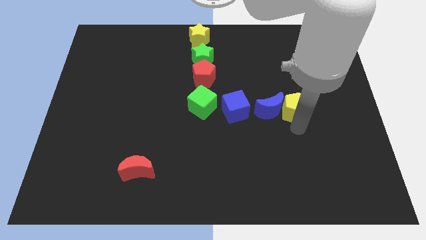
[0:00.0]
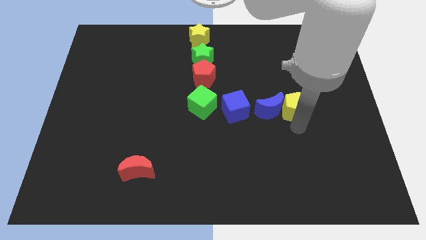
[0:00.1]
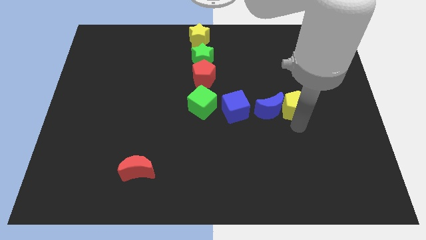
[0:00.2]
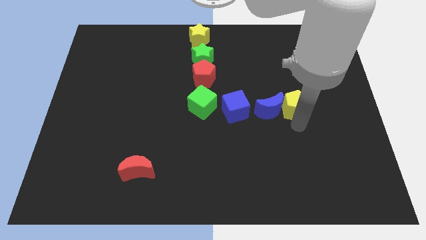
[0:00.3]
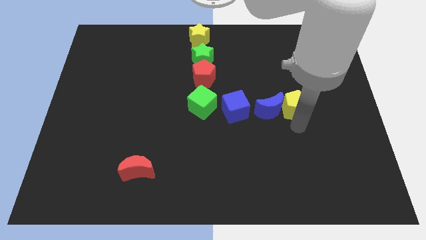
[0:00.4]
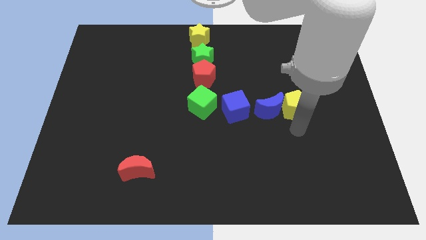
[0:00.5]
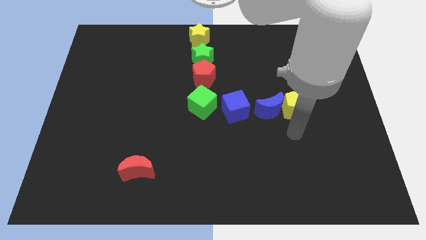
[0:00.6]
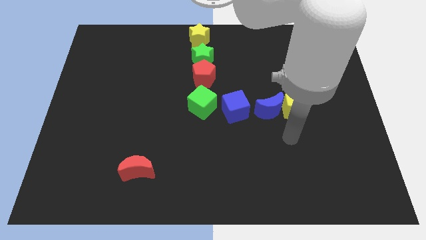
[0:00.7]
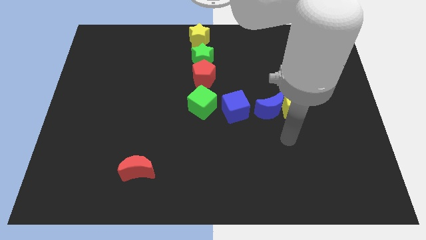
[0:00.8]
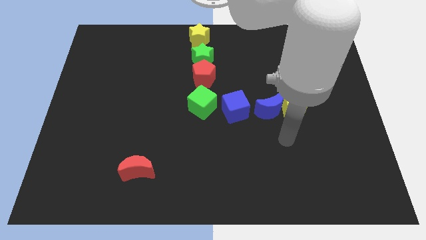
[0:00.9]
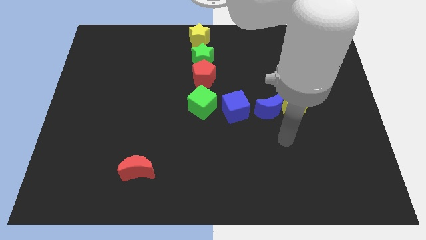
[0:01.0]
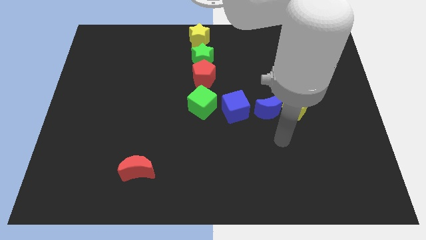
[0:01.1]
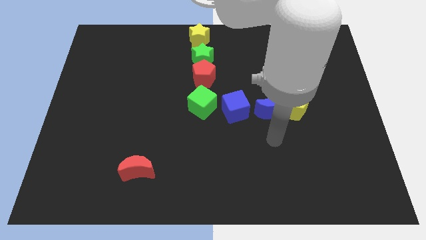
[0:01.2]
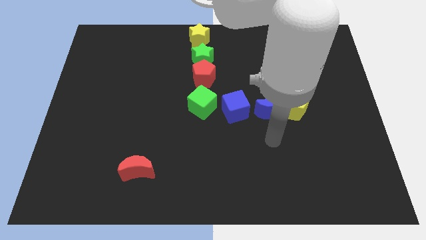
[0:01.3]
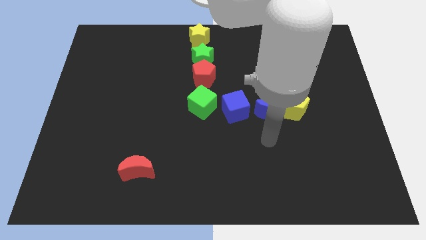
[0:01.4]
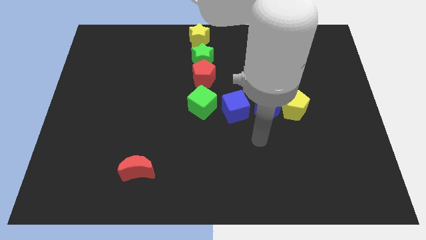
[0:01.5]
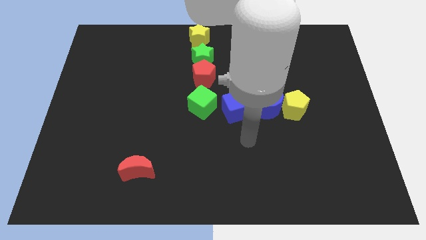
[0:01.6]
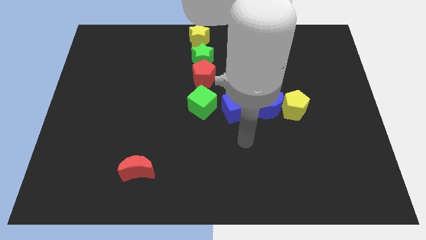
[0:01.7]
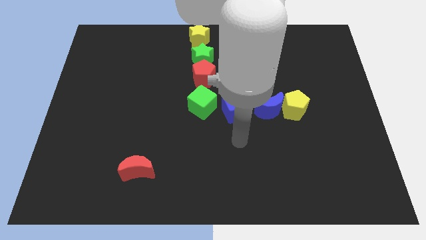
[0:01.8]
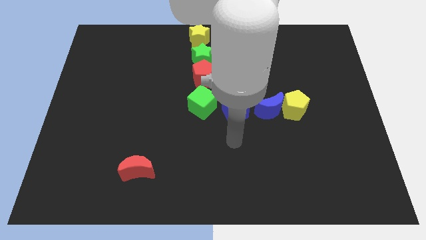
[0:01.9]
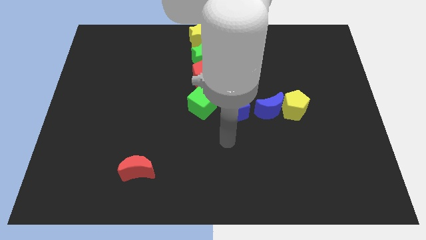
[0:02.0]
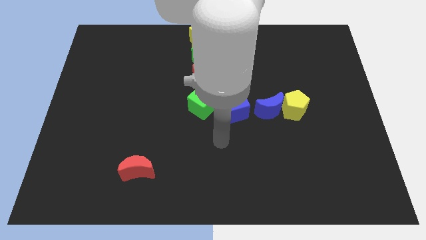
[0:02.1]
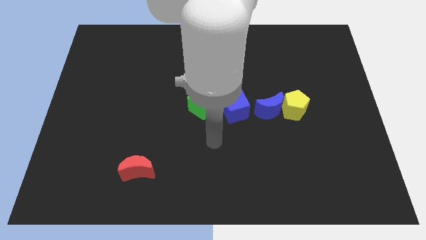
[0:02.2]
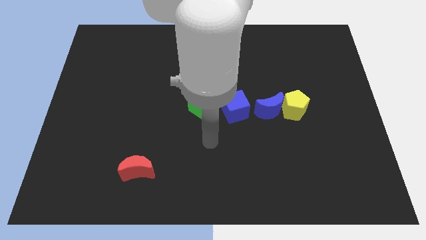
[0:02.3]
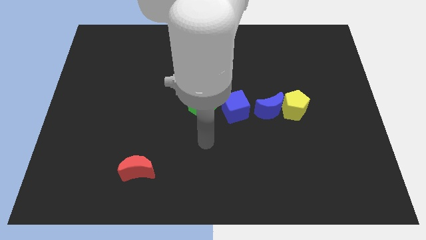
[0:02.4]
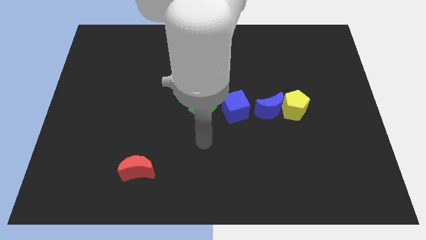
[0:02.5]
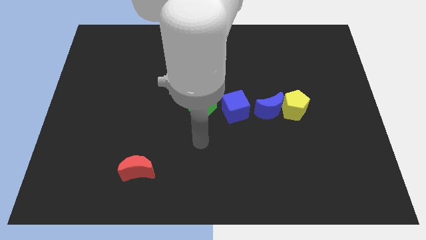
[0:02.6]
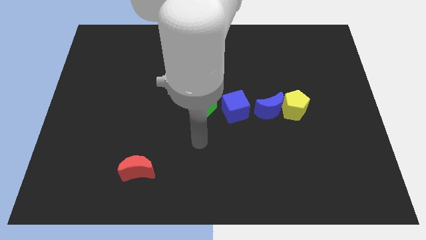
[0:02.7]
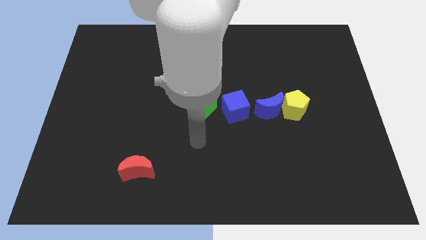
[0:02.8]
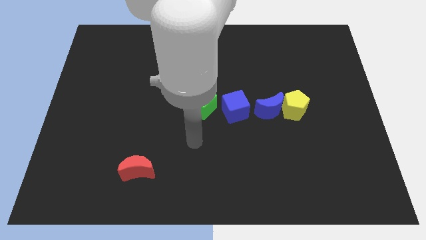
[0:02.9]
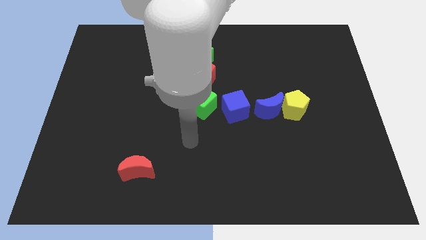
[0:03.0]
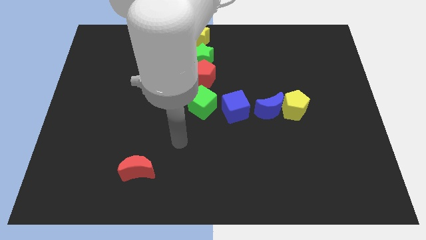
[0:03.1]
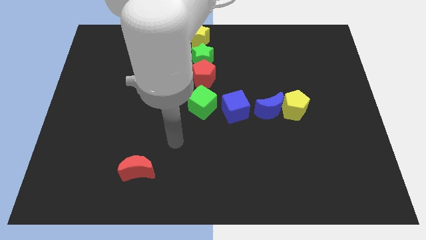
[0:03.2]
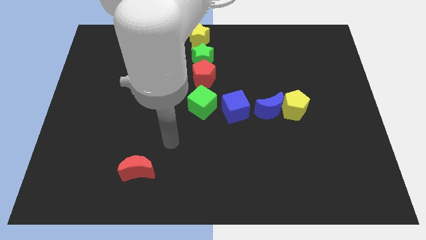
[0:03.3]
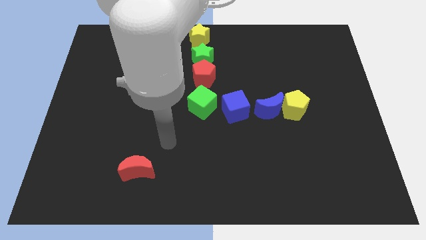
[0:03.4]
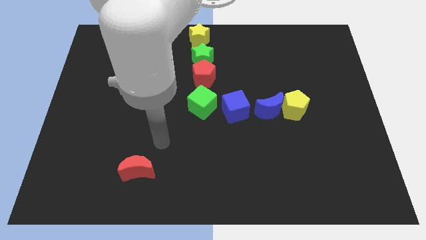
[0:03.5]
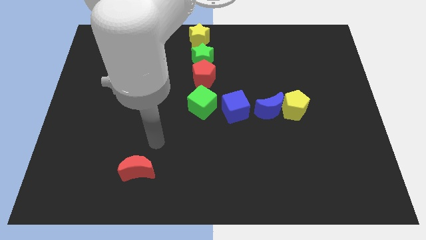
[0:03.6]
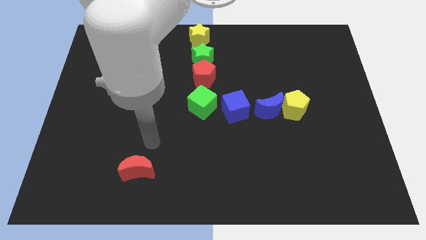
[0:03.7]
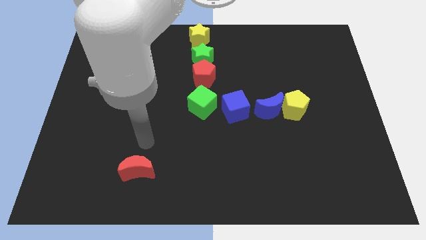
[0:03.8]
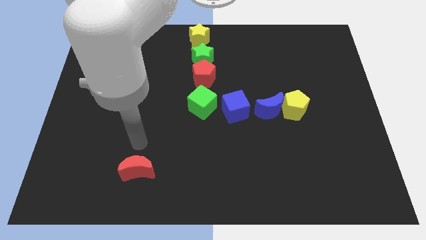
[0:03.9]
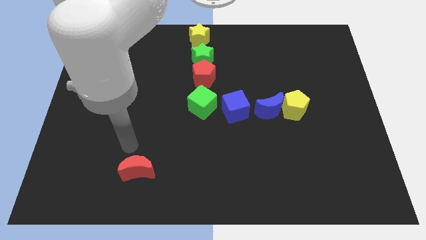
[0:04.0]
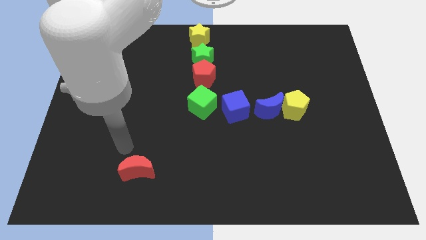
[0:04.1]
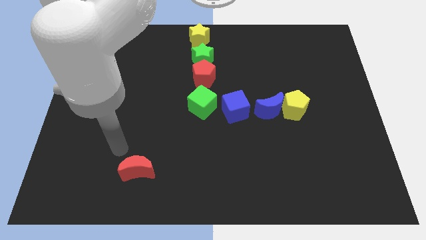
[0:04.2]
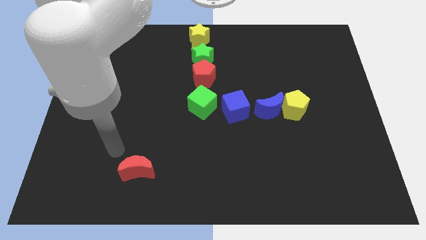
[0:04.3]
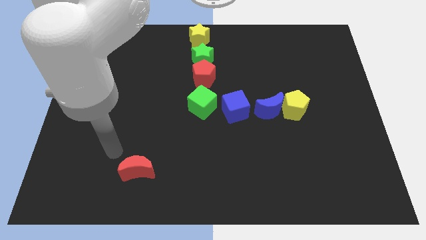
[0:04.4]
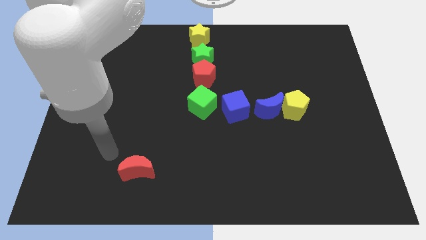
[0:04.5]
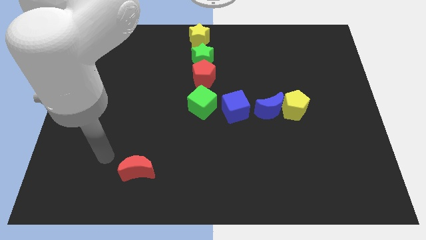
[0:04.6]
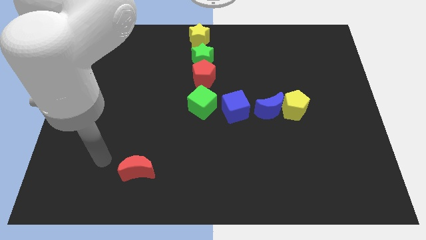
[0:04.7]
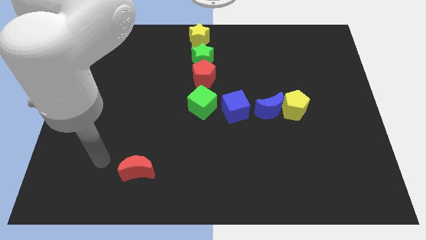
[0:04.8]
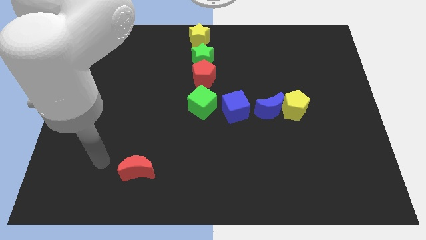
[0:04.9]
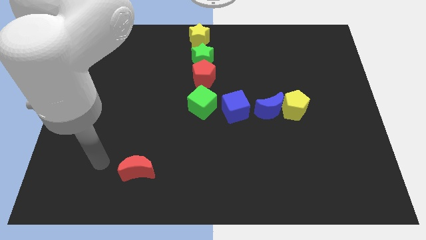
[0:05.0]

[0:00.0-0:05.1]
move your arm away from the yellow pentagon

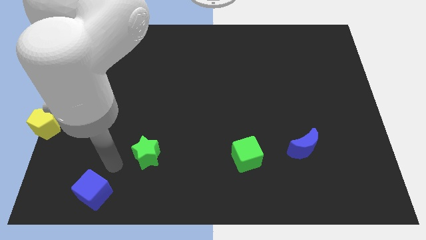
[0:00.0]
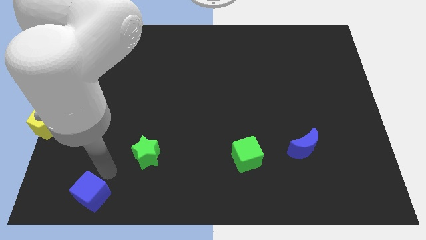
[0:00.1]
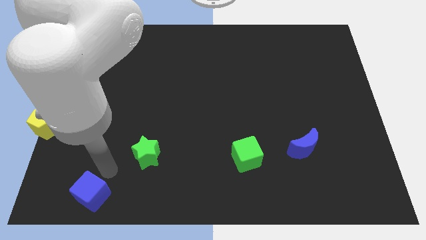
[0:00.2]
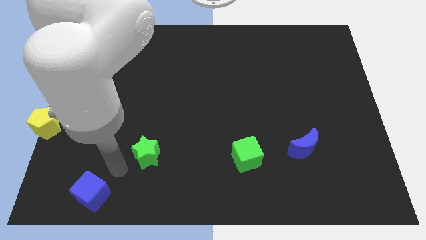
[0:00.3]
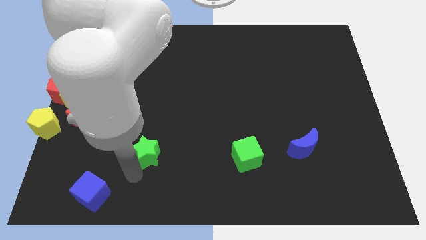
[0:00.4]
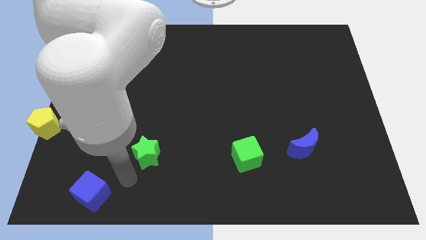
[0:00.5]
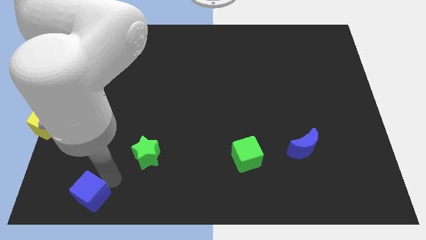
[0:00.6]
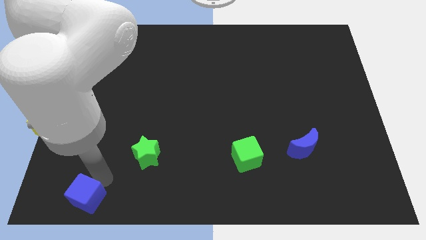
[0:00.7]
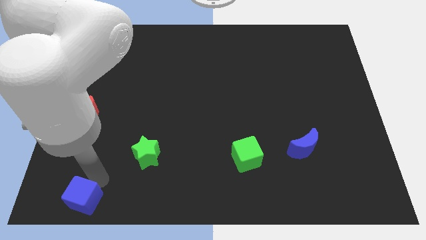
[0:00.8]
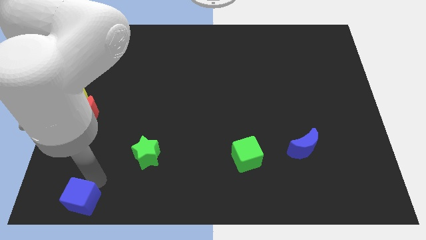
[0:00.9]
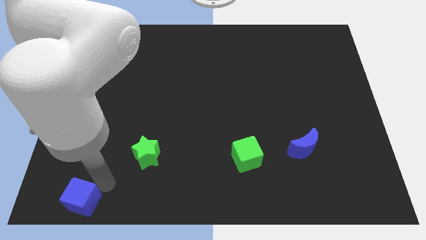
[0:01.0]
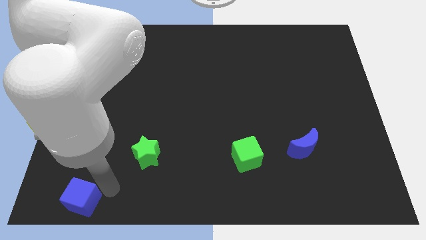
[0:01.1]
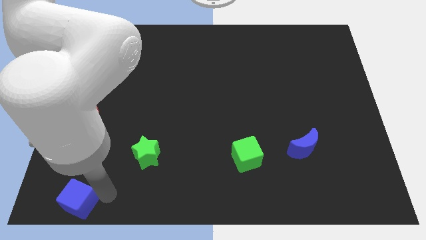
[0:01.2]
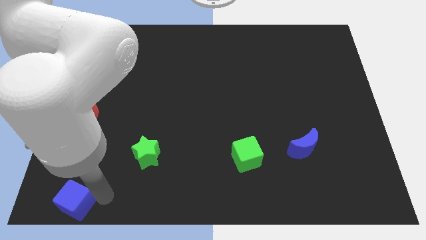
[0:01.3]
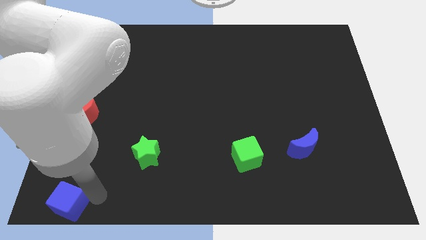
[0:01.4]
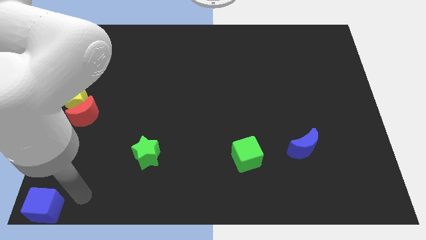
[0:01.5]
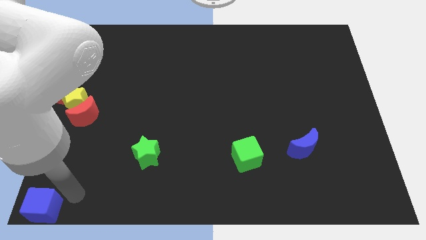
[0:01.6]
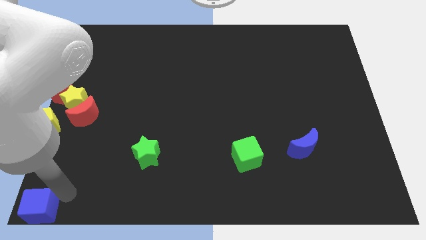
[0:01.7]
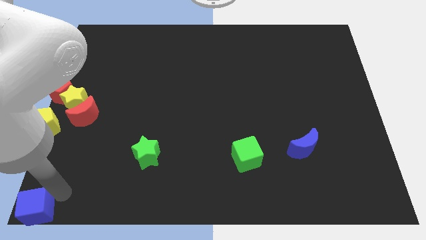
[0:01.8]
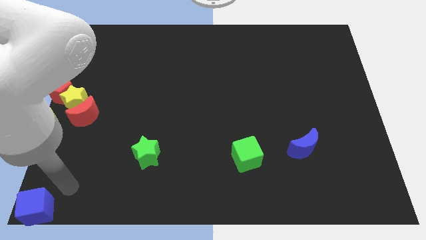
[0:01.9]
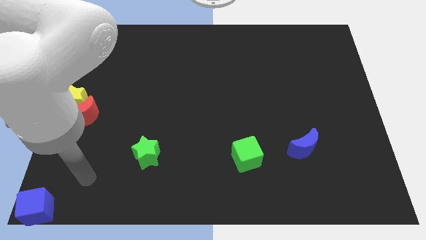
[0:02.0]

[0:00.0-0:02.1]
slide blue cube to the bottom left

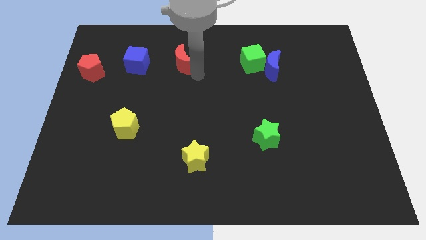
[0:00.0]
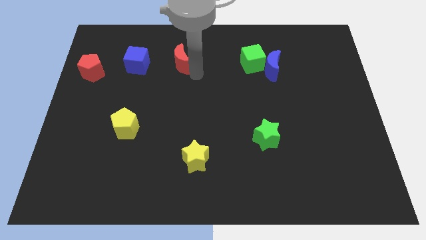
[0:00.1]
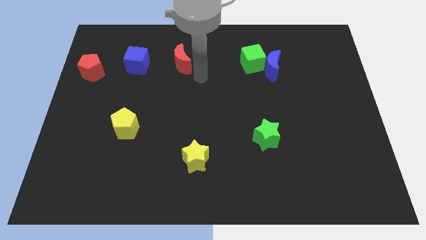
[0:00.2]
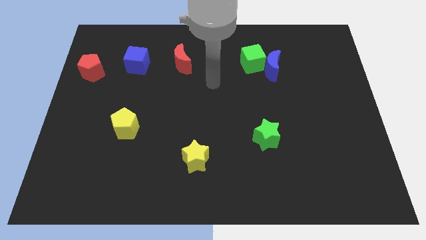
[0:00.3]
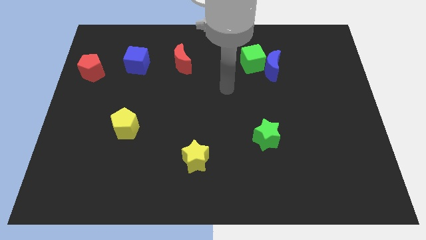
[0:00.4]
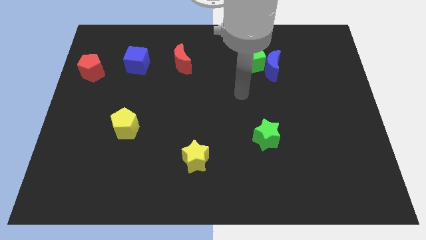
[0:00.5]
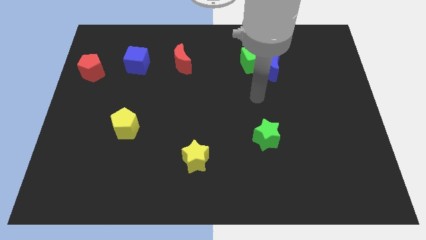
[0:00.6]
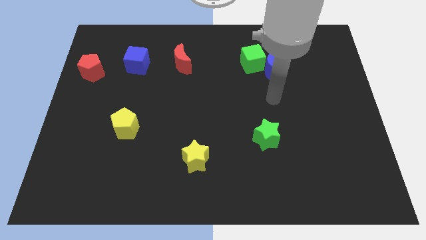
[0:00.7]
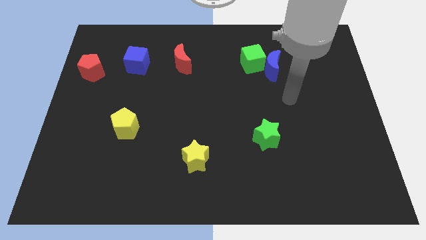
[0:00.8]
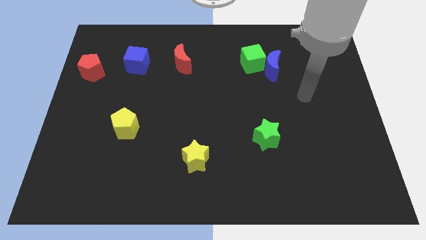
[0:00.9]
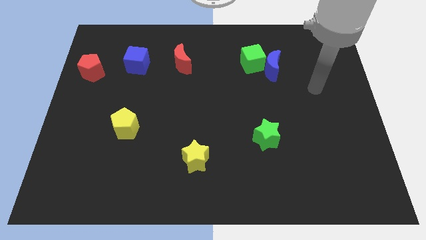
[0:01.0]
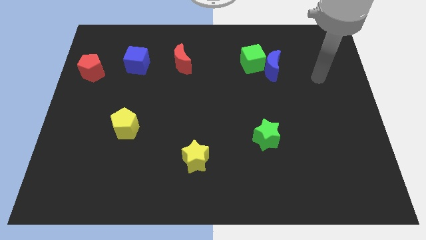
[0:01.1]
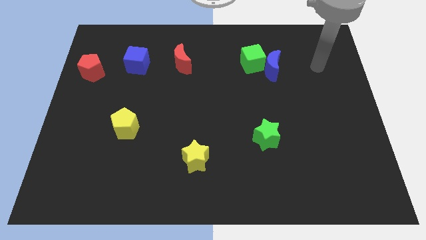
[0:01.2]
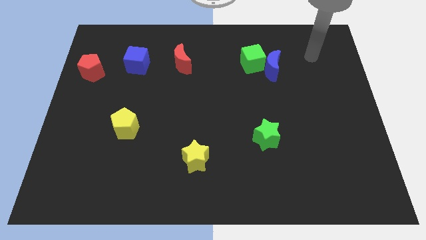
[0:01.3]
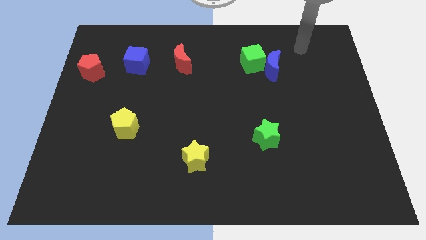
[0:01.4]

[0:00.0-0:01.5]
move your arm away from the red moon

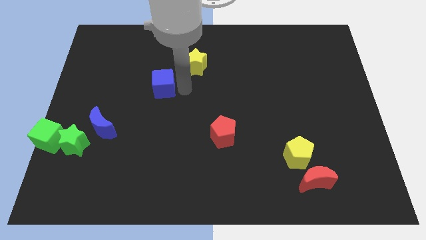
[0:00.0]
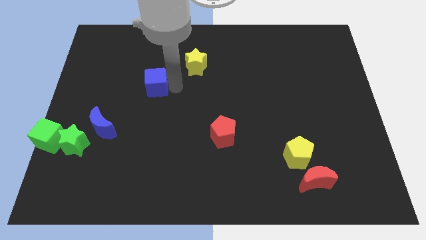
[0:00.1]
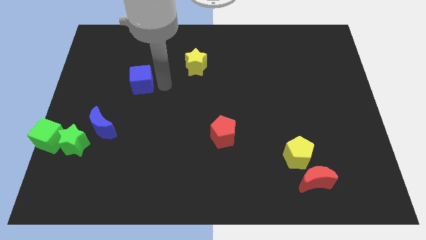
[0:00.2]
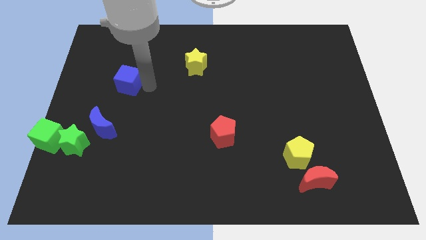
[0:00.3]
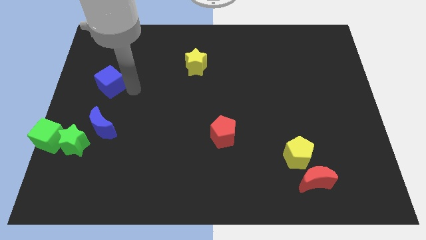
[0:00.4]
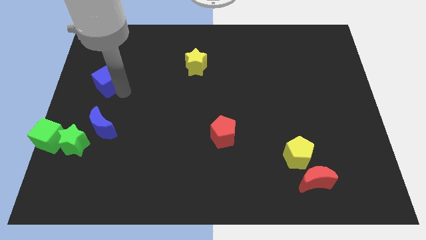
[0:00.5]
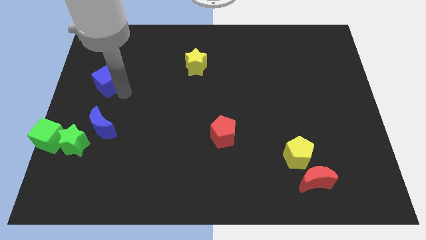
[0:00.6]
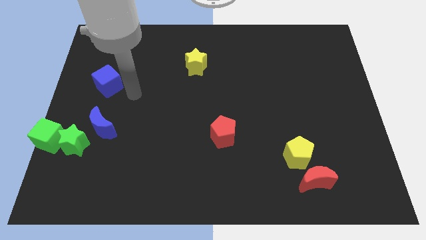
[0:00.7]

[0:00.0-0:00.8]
push the blue cube to the top of the blue crescent
